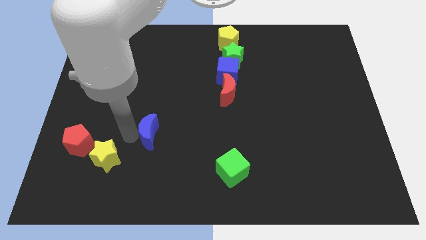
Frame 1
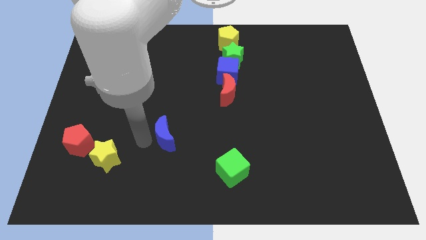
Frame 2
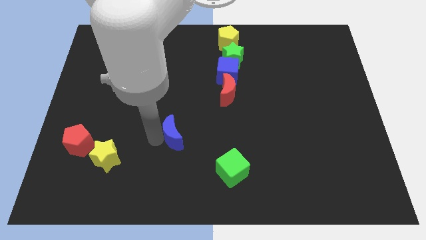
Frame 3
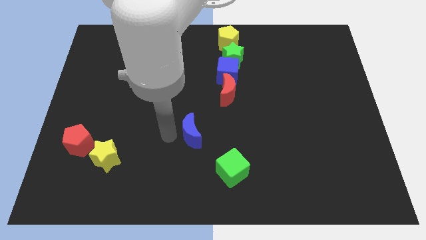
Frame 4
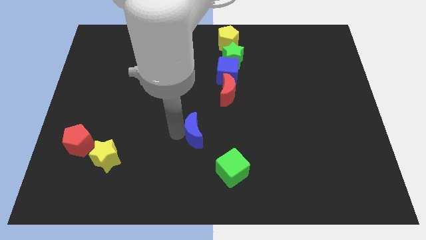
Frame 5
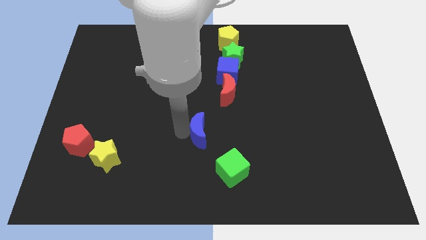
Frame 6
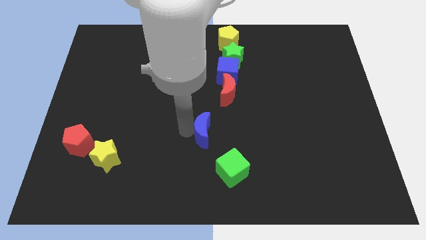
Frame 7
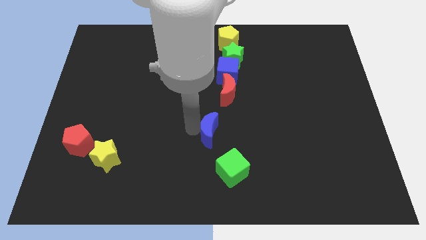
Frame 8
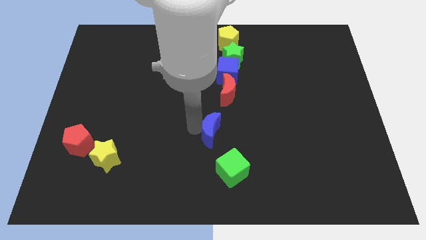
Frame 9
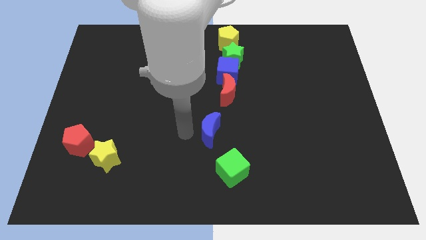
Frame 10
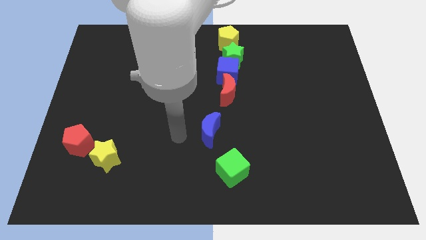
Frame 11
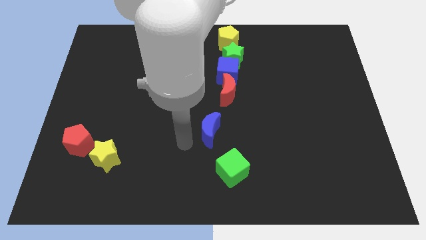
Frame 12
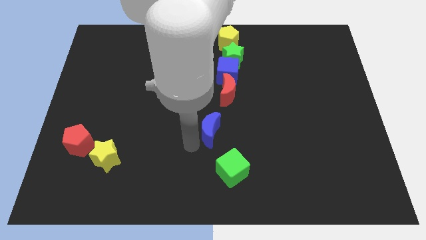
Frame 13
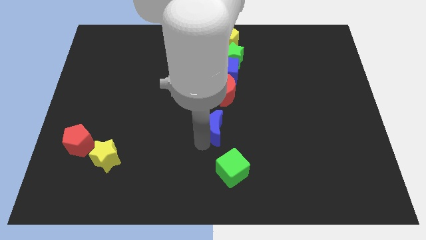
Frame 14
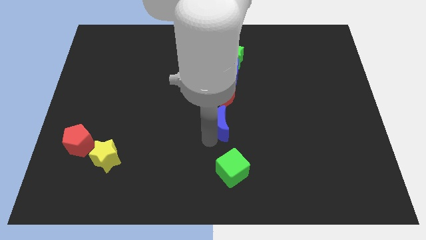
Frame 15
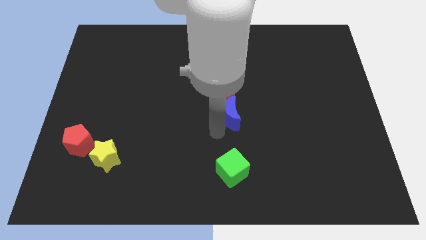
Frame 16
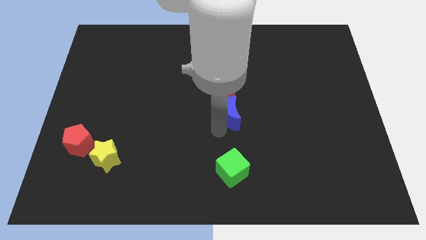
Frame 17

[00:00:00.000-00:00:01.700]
move the blue crescent close to red crescent

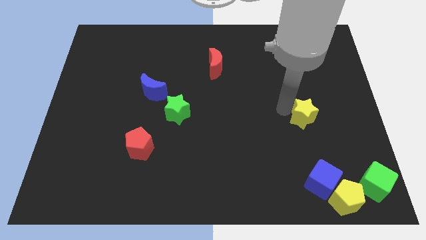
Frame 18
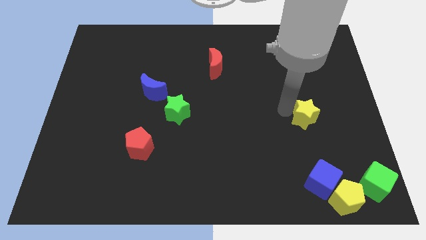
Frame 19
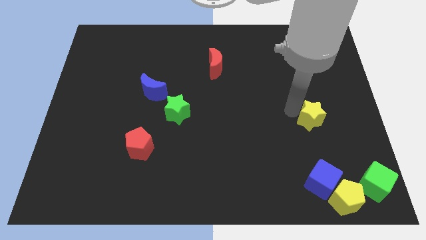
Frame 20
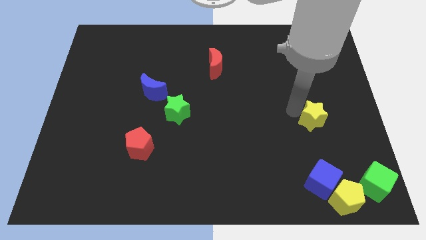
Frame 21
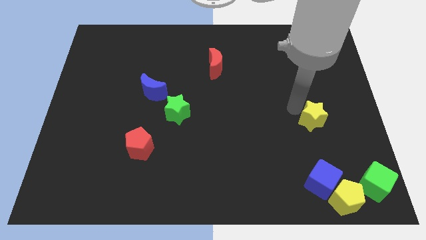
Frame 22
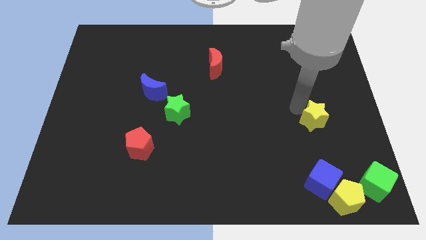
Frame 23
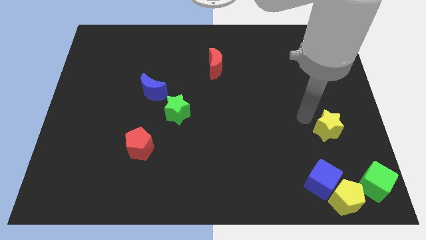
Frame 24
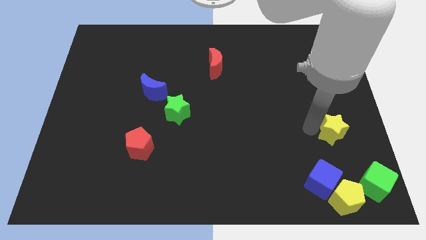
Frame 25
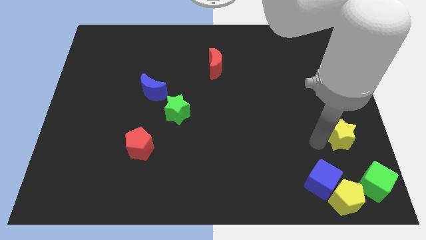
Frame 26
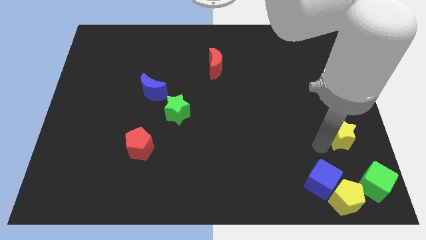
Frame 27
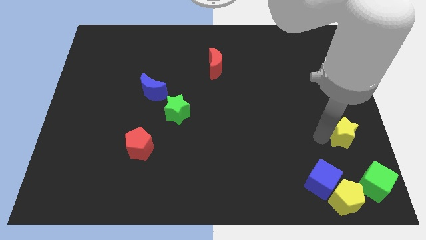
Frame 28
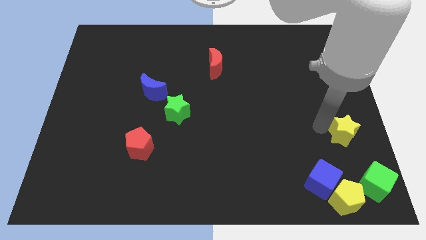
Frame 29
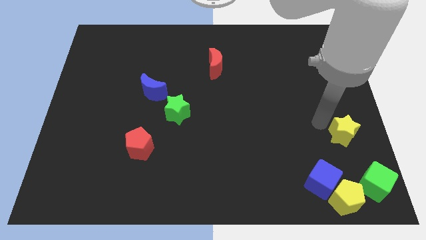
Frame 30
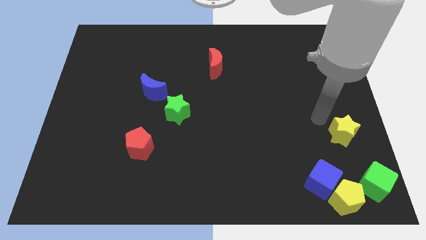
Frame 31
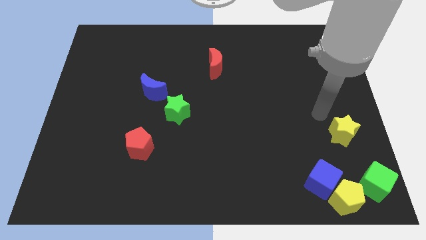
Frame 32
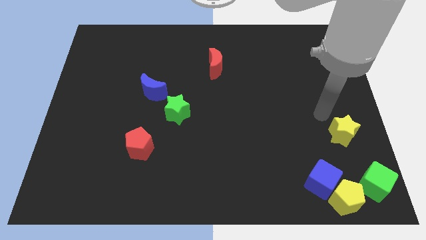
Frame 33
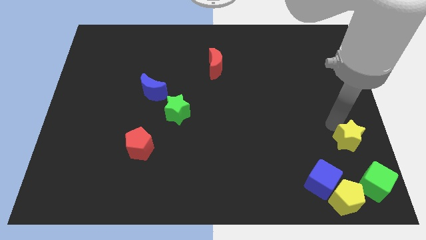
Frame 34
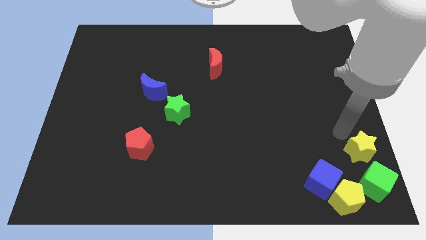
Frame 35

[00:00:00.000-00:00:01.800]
push the yellow star diagonally top right to the blue cube

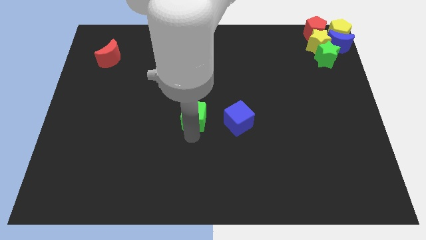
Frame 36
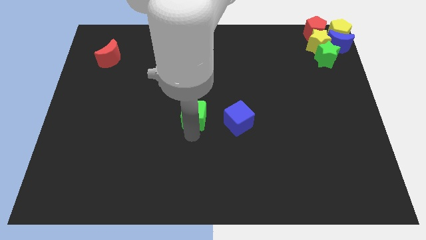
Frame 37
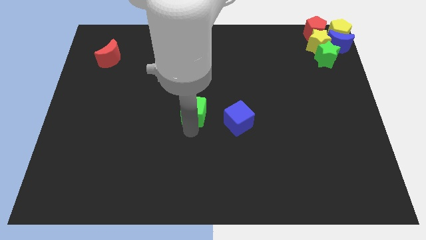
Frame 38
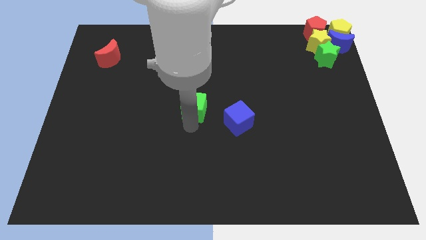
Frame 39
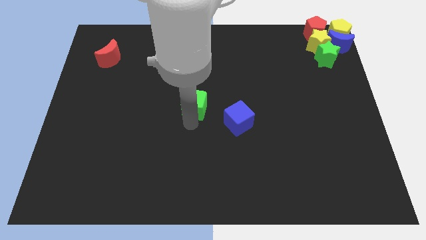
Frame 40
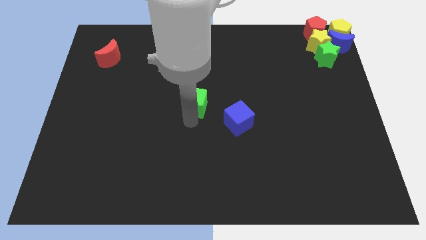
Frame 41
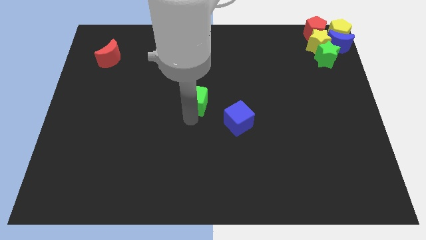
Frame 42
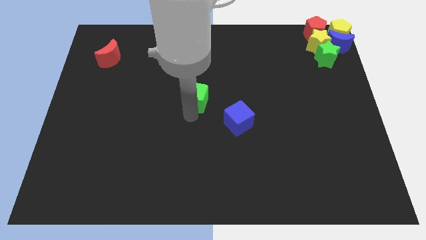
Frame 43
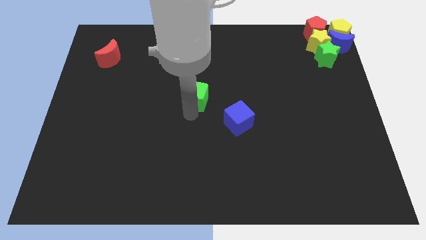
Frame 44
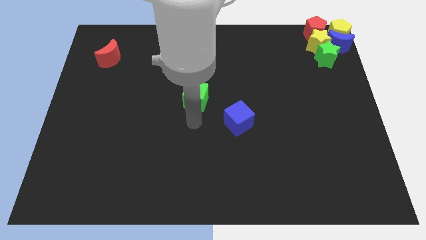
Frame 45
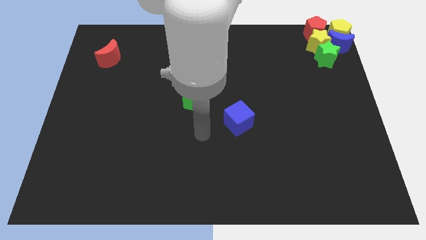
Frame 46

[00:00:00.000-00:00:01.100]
push the green cube to the center of the board

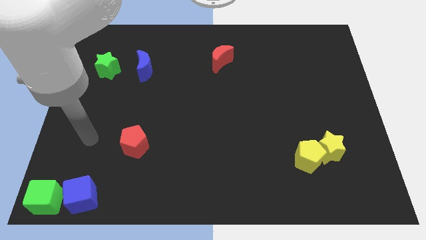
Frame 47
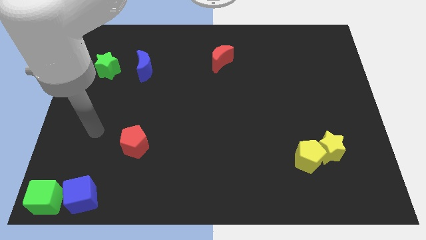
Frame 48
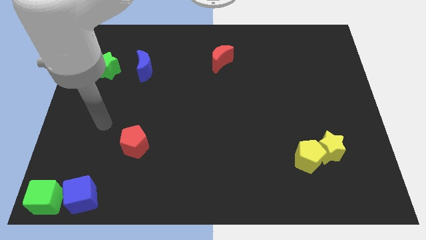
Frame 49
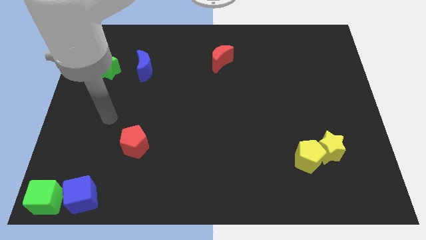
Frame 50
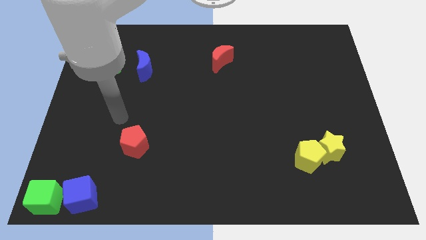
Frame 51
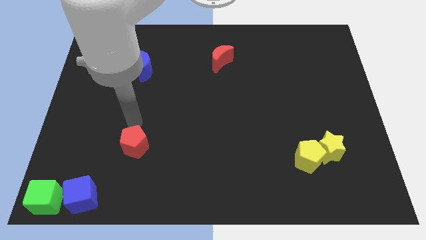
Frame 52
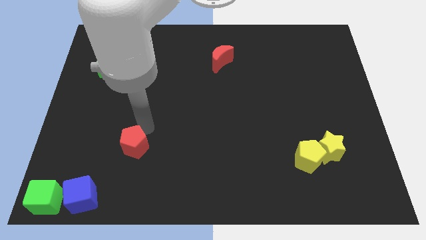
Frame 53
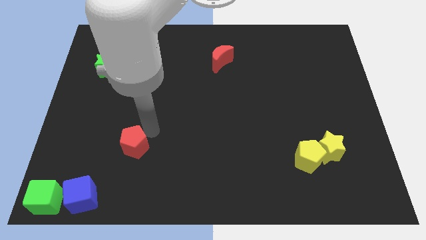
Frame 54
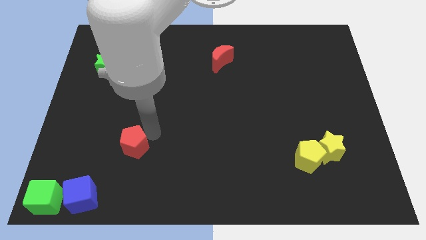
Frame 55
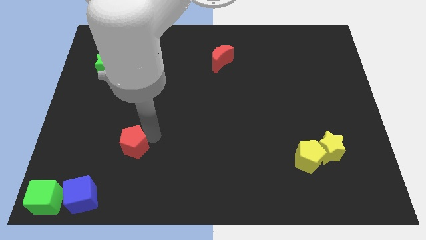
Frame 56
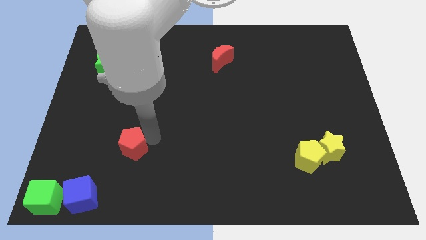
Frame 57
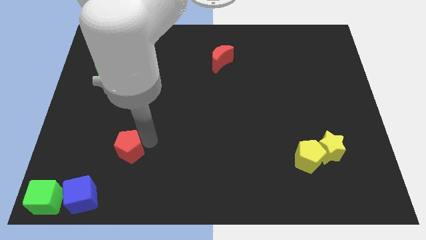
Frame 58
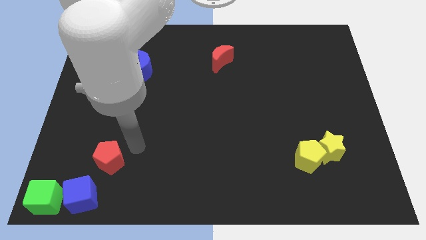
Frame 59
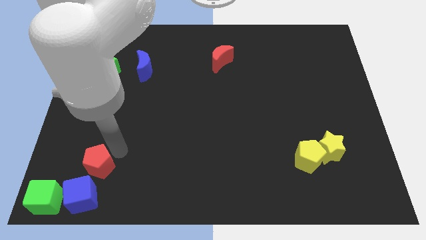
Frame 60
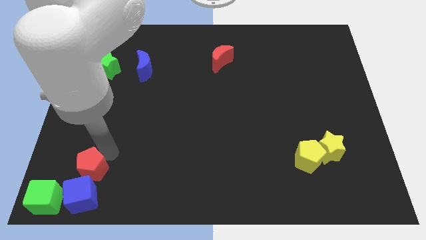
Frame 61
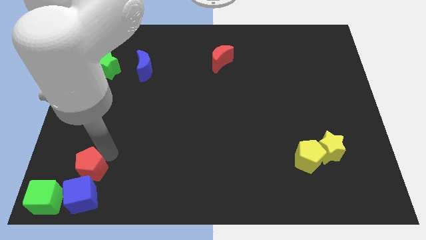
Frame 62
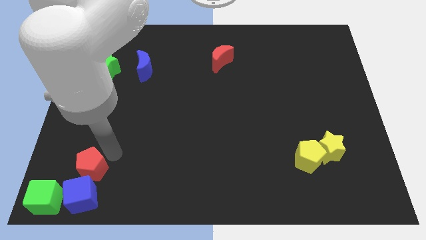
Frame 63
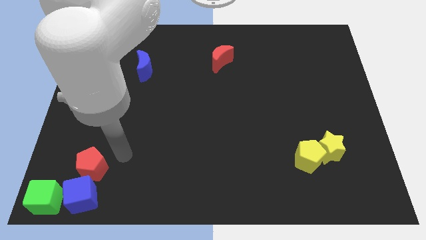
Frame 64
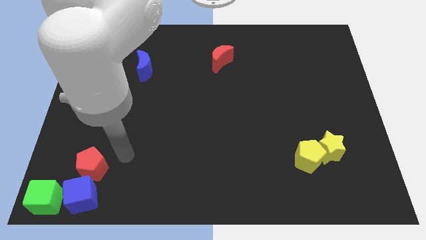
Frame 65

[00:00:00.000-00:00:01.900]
drag the red pentagon to the top right side of the blue cube

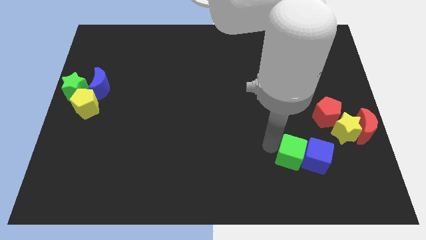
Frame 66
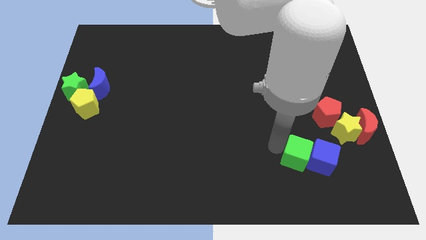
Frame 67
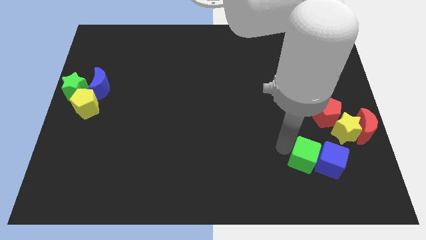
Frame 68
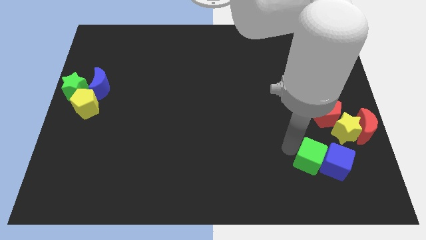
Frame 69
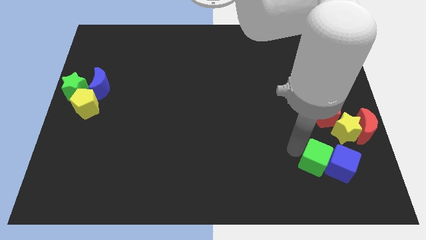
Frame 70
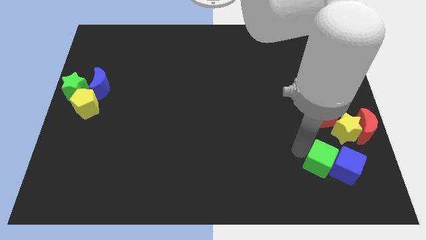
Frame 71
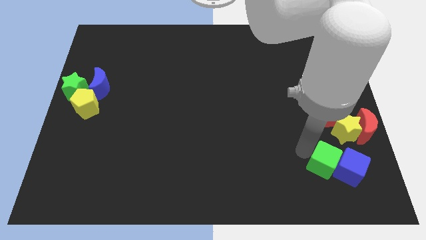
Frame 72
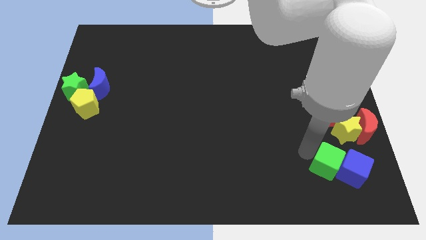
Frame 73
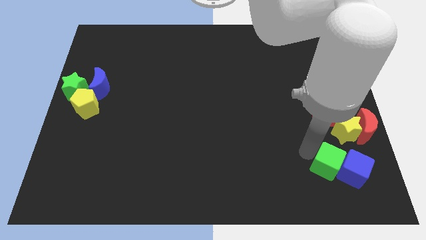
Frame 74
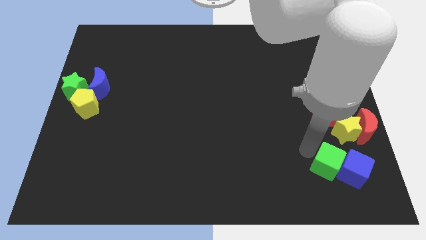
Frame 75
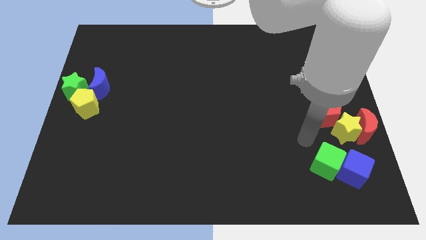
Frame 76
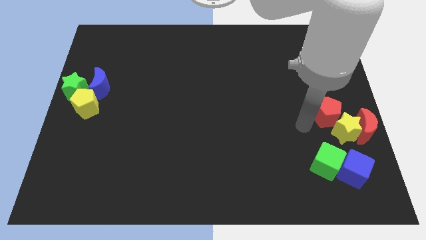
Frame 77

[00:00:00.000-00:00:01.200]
place green cube below yellow star

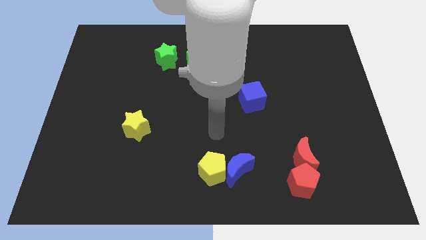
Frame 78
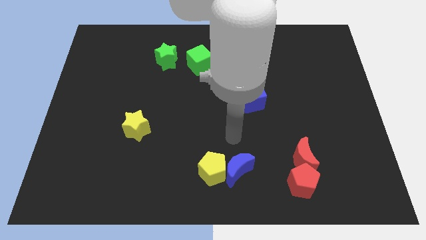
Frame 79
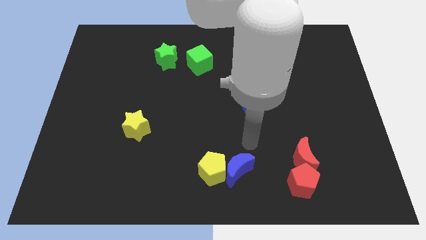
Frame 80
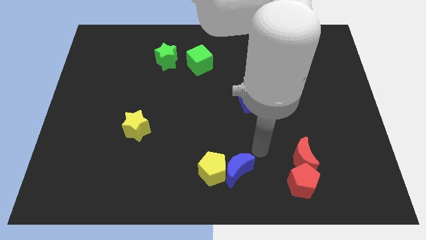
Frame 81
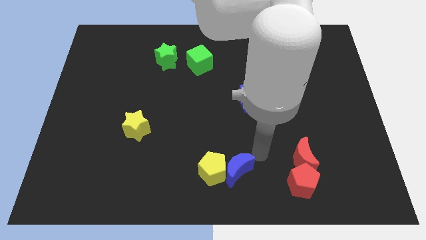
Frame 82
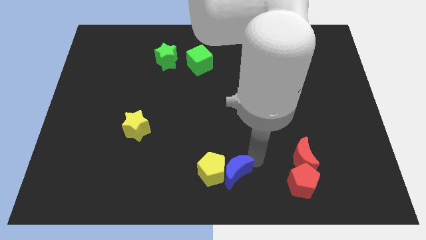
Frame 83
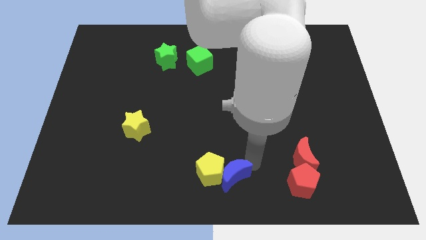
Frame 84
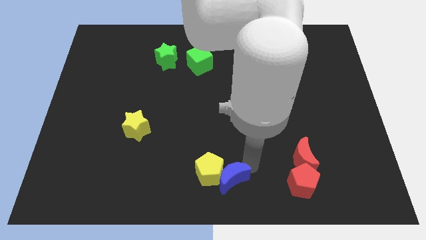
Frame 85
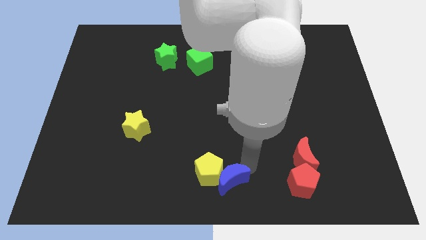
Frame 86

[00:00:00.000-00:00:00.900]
push the blue crescent slightly to the left

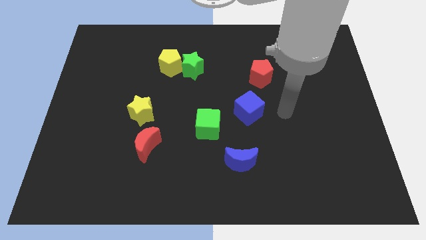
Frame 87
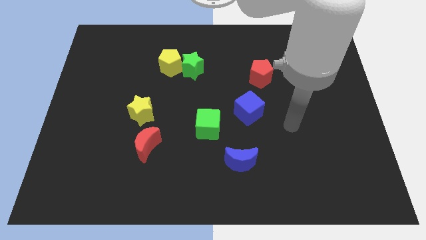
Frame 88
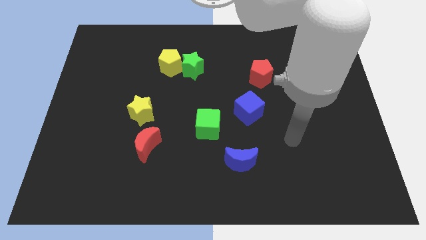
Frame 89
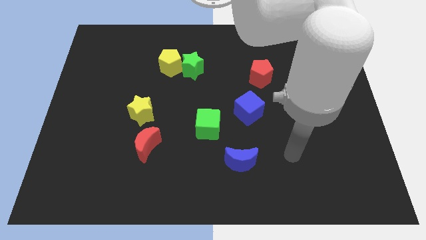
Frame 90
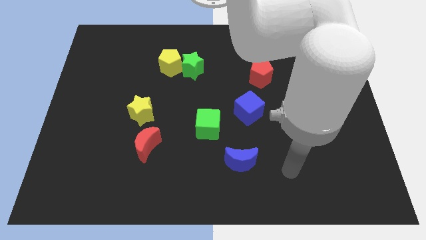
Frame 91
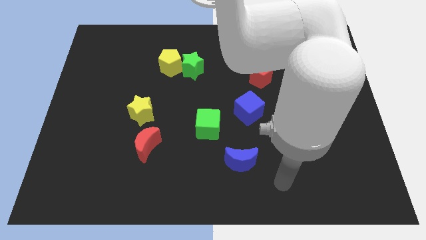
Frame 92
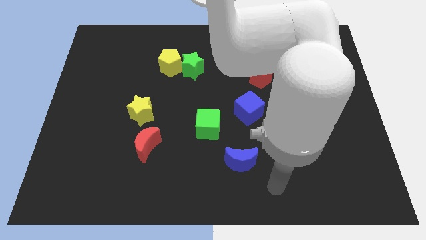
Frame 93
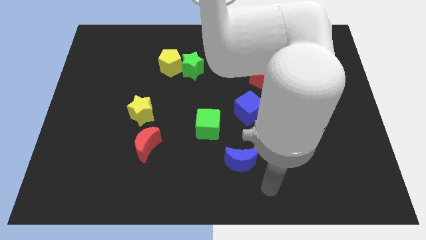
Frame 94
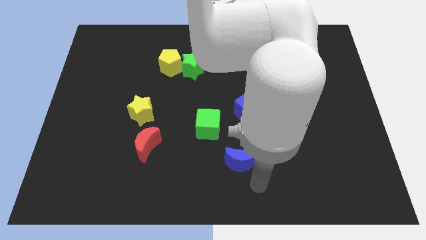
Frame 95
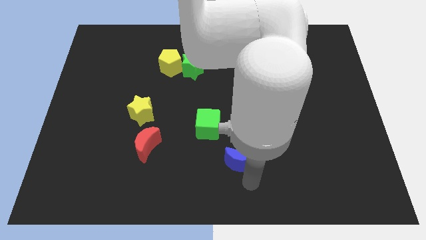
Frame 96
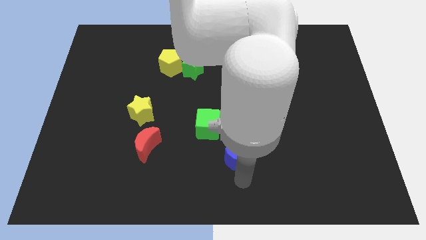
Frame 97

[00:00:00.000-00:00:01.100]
point your hand at the bottom of the blue crescent
